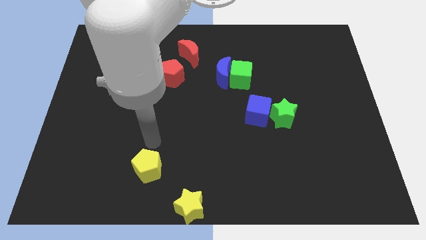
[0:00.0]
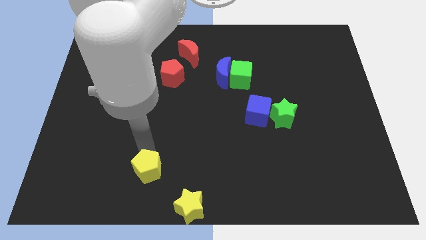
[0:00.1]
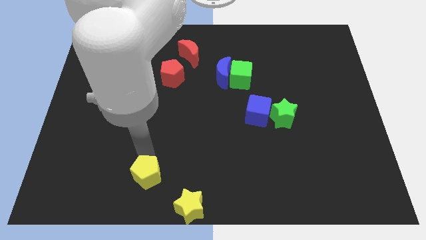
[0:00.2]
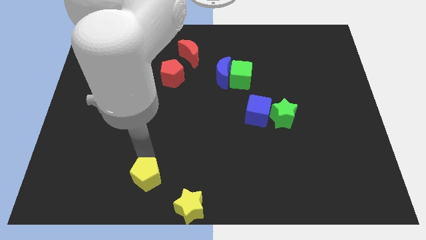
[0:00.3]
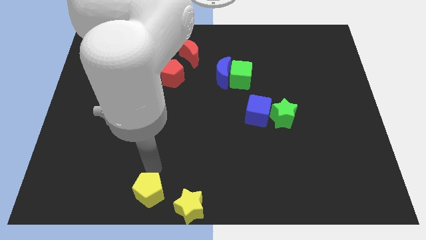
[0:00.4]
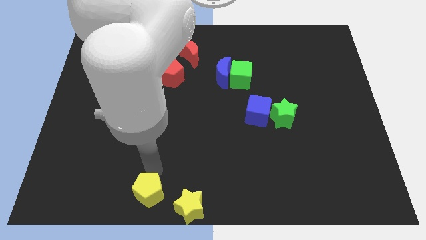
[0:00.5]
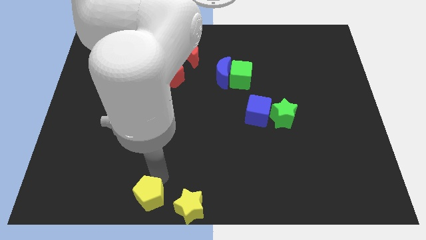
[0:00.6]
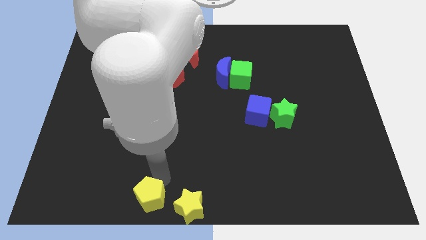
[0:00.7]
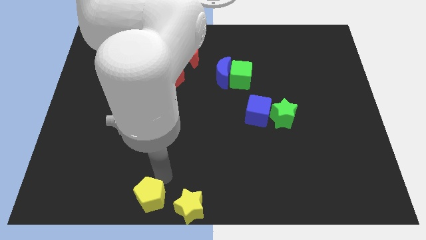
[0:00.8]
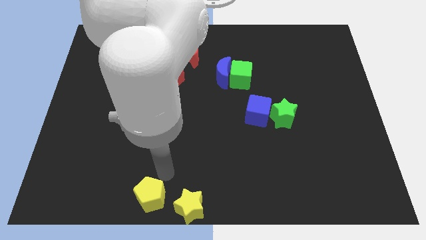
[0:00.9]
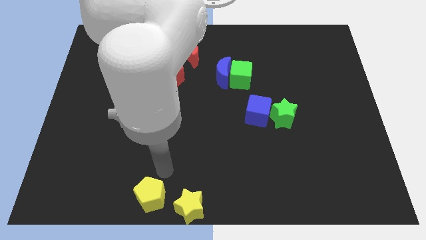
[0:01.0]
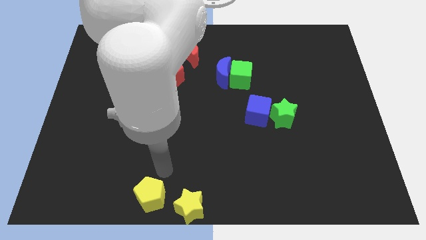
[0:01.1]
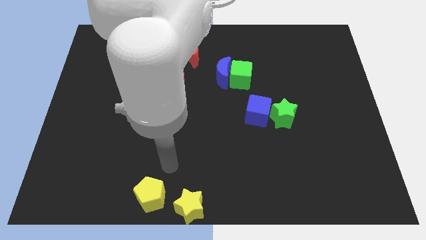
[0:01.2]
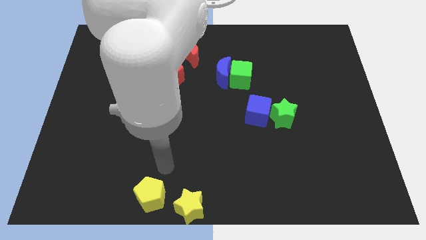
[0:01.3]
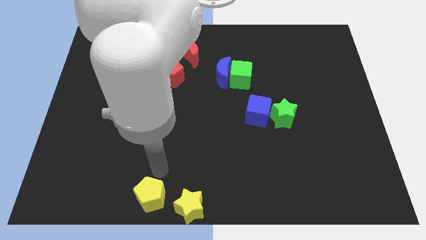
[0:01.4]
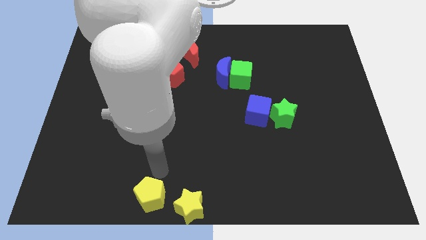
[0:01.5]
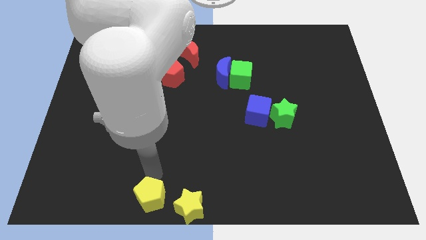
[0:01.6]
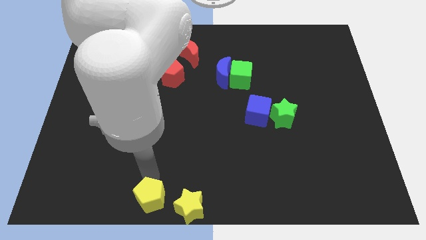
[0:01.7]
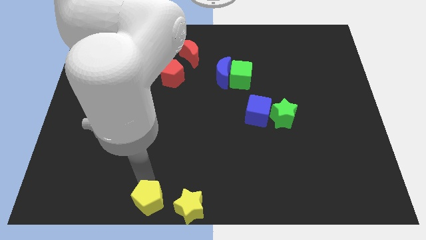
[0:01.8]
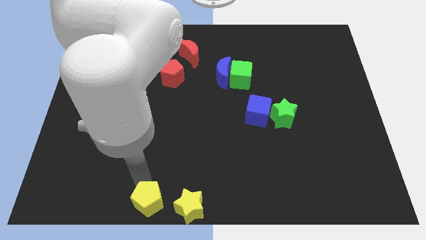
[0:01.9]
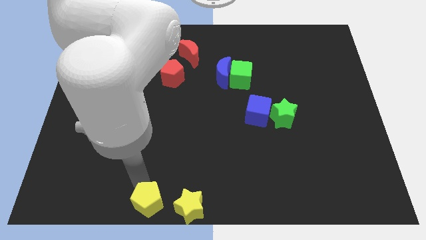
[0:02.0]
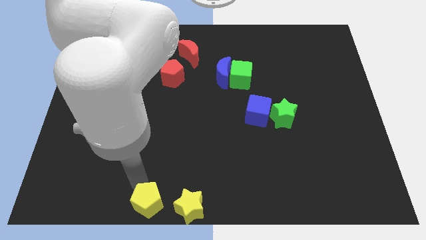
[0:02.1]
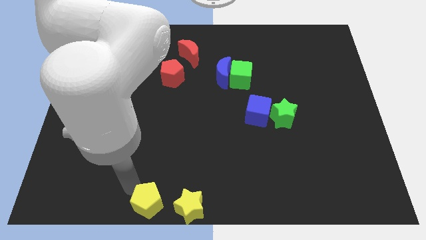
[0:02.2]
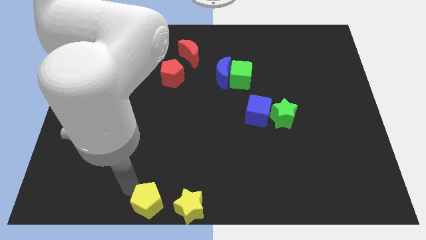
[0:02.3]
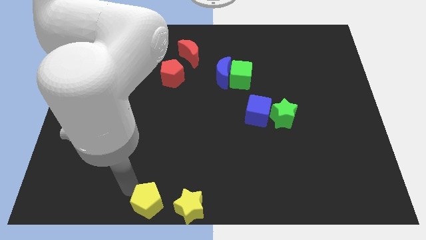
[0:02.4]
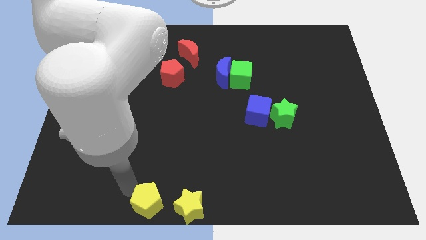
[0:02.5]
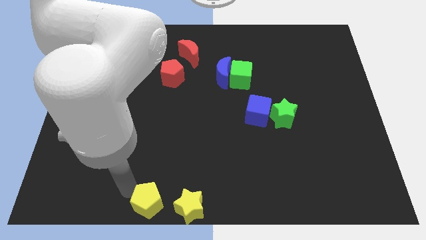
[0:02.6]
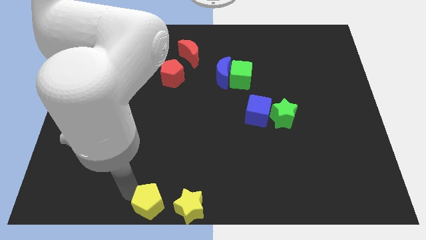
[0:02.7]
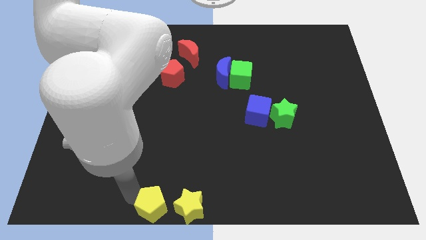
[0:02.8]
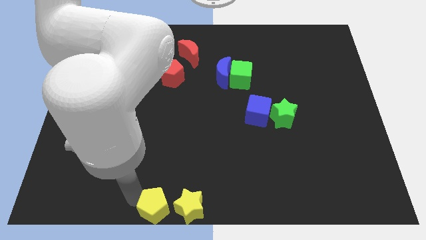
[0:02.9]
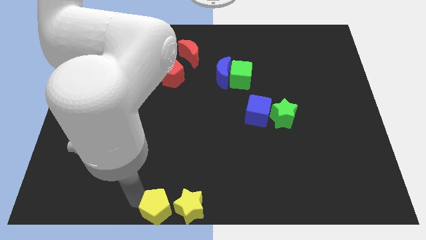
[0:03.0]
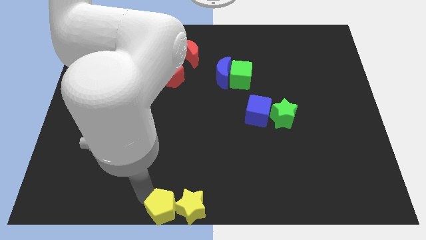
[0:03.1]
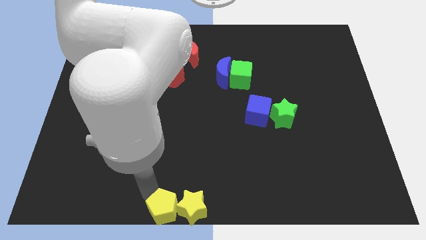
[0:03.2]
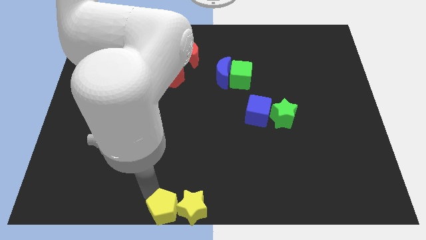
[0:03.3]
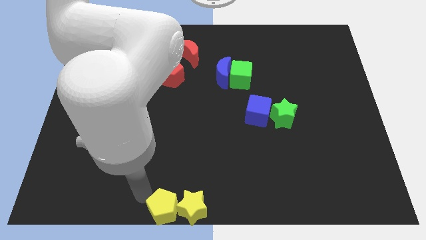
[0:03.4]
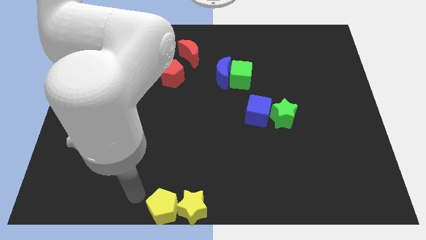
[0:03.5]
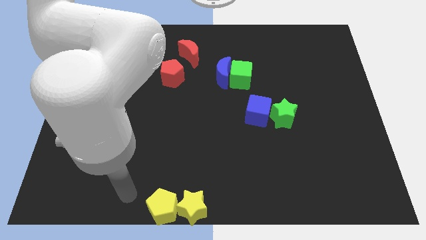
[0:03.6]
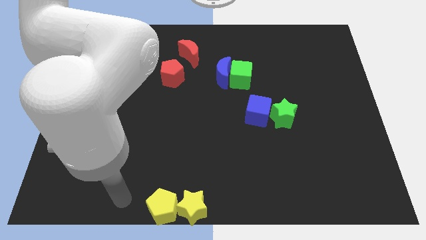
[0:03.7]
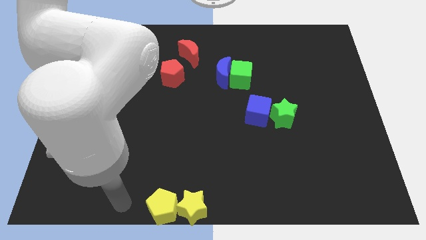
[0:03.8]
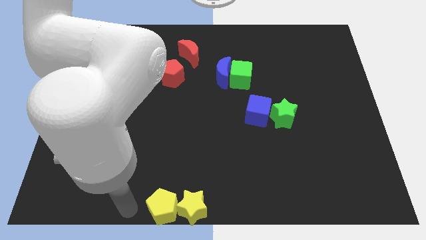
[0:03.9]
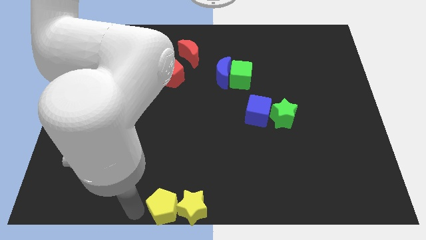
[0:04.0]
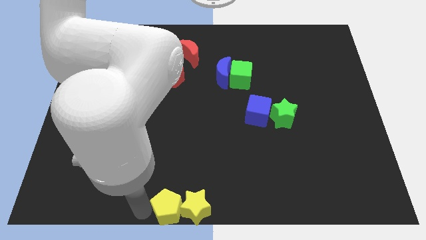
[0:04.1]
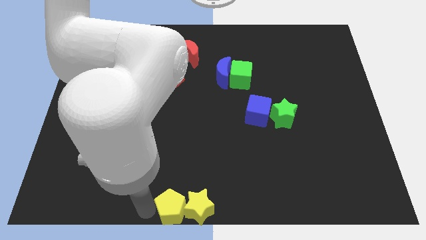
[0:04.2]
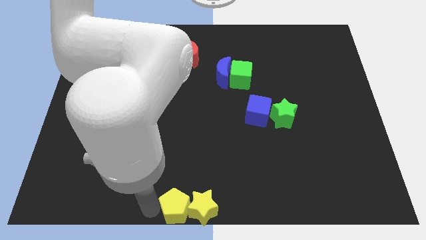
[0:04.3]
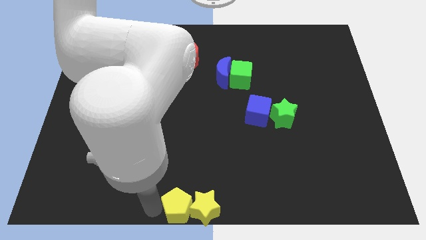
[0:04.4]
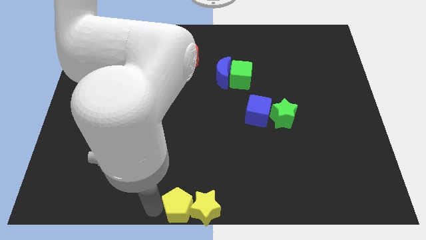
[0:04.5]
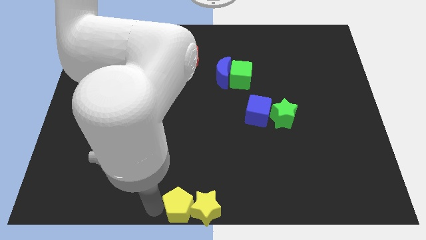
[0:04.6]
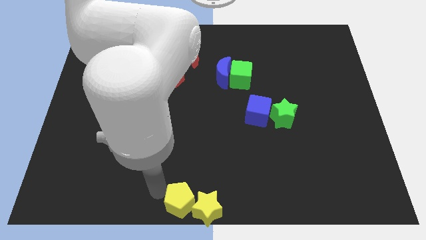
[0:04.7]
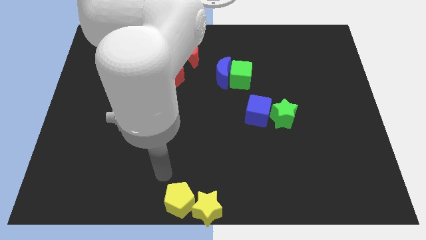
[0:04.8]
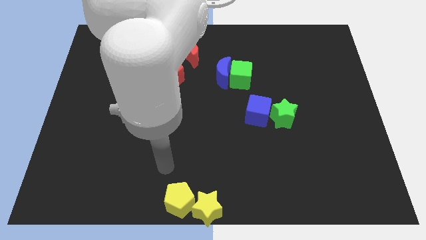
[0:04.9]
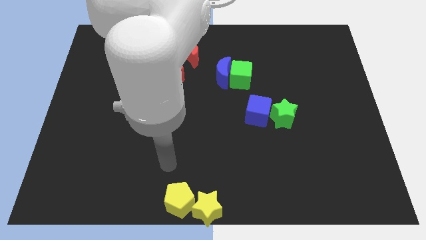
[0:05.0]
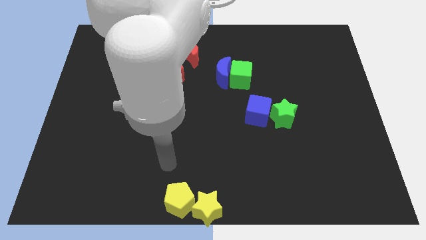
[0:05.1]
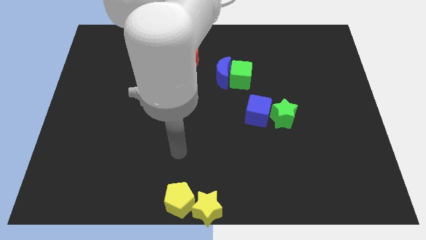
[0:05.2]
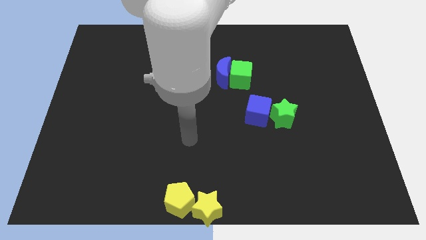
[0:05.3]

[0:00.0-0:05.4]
place both the yellow blocks towards the bottom center

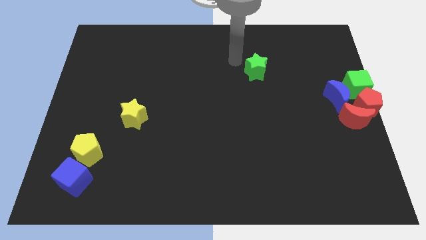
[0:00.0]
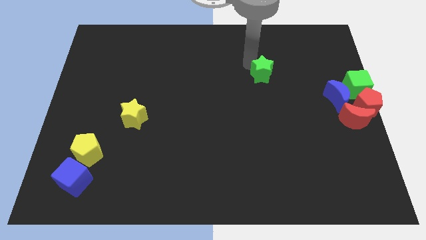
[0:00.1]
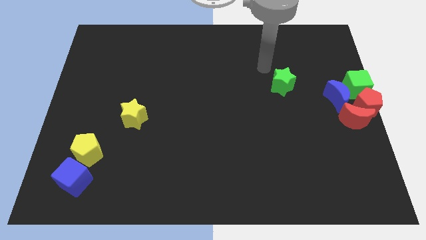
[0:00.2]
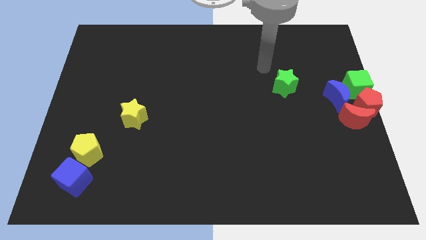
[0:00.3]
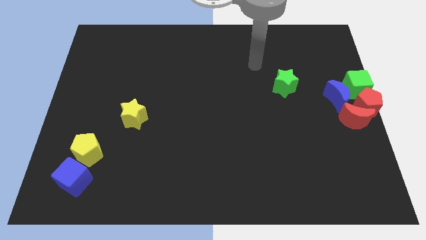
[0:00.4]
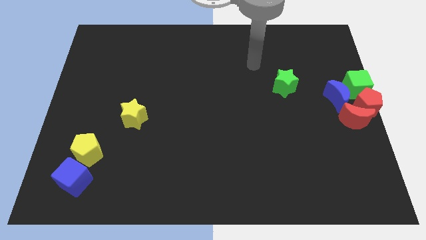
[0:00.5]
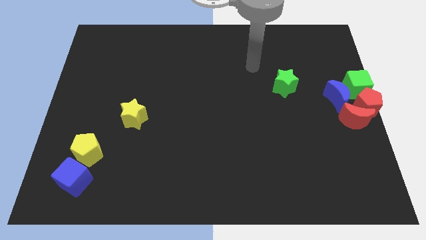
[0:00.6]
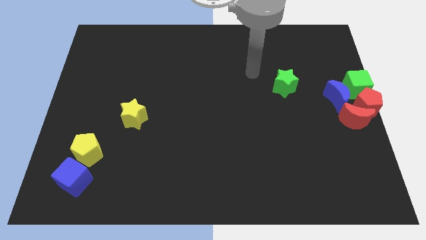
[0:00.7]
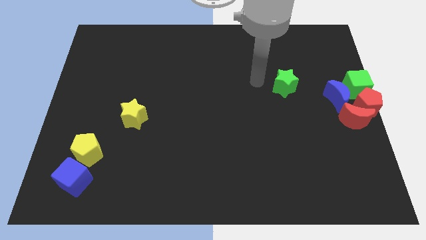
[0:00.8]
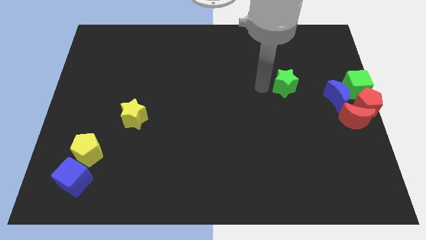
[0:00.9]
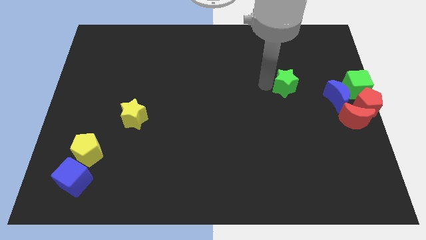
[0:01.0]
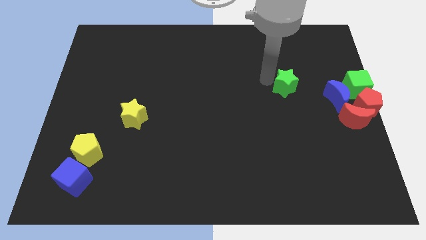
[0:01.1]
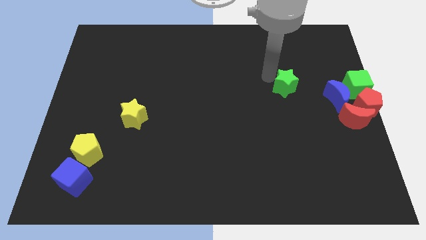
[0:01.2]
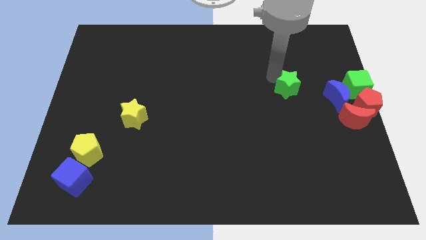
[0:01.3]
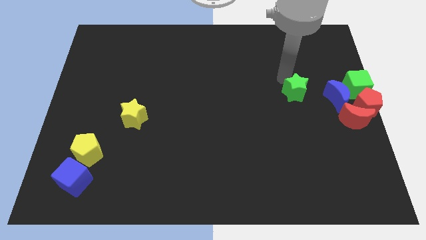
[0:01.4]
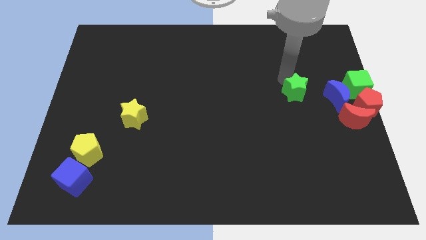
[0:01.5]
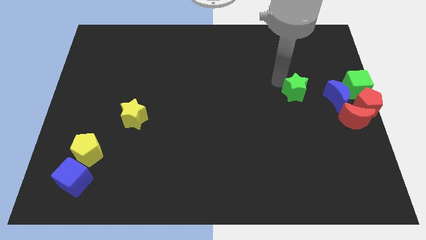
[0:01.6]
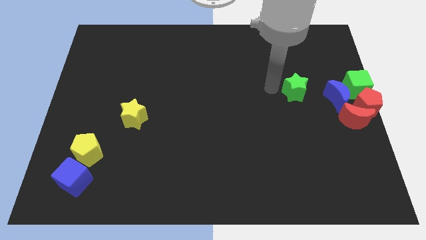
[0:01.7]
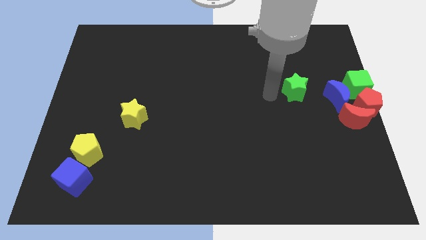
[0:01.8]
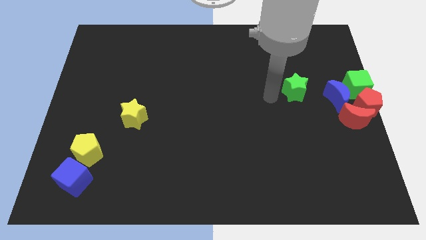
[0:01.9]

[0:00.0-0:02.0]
place the green star to the left of the blue moon

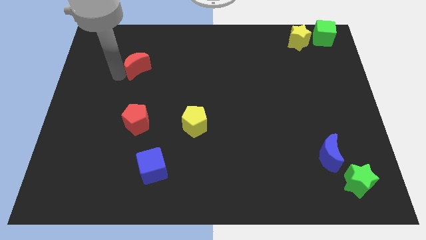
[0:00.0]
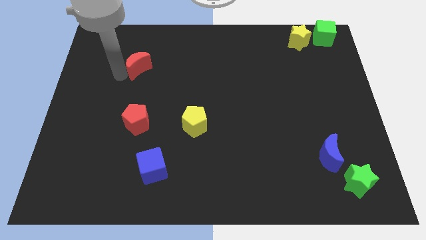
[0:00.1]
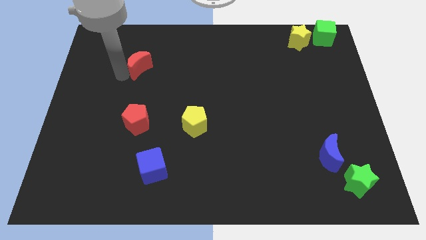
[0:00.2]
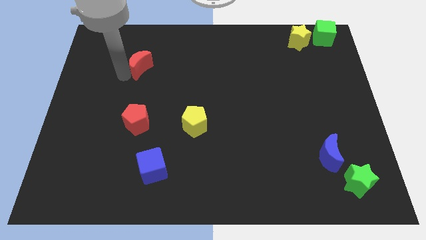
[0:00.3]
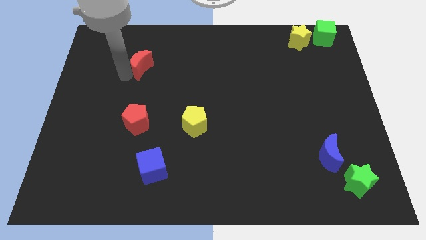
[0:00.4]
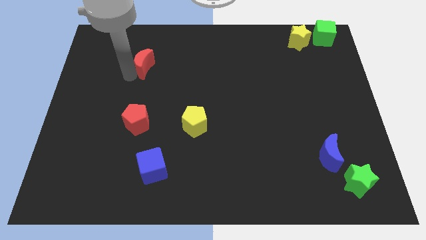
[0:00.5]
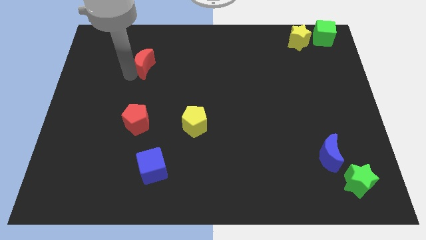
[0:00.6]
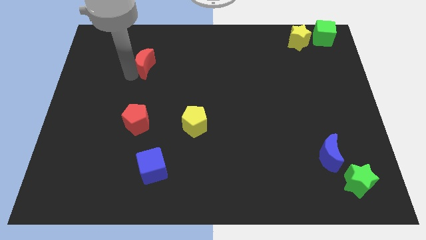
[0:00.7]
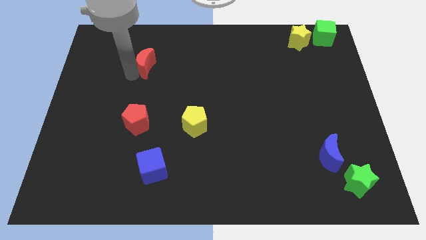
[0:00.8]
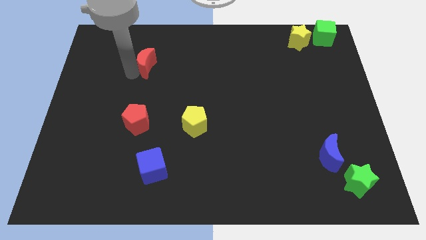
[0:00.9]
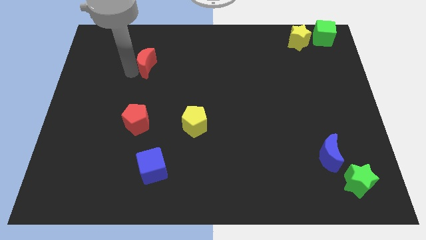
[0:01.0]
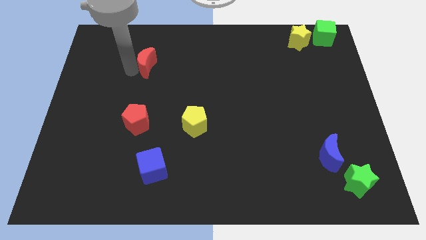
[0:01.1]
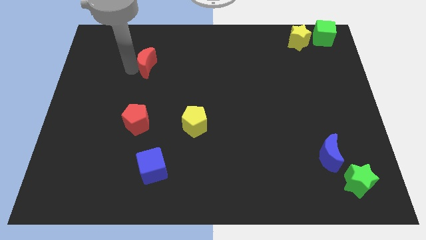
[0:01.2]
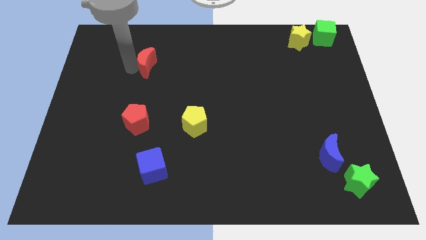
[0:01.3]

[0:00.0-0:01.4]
move the red crescent to the right of the board
